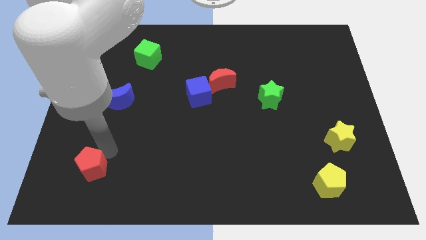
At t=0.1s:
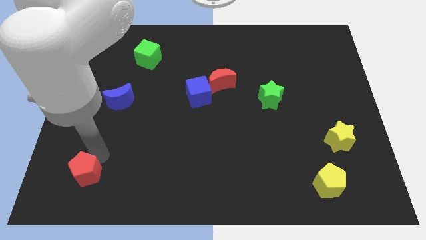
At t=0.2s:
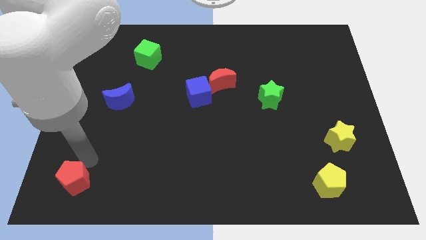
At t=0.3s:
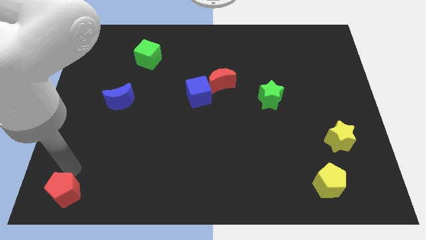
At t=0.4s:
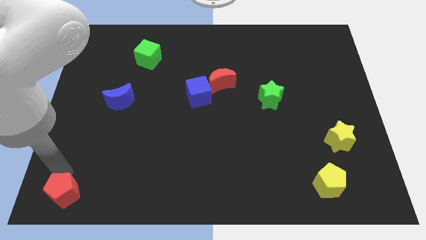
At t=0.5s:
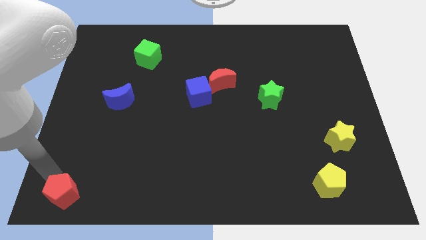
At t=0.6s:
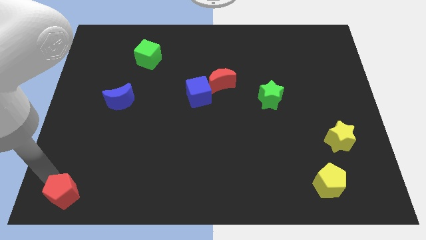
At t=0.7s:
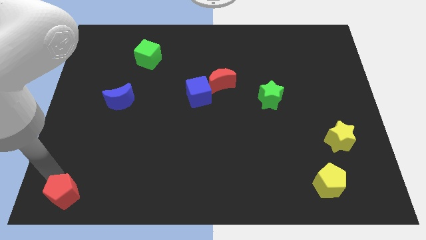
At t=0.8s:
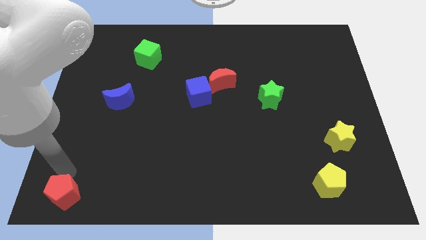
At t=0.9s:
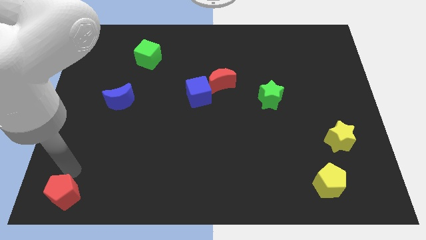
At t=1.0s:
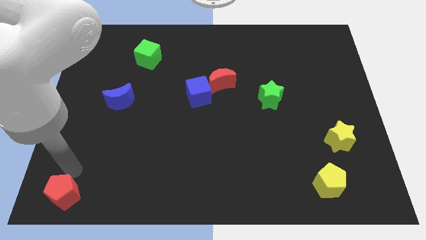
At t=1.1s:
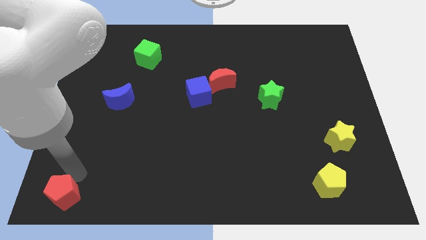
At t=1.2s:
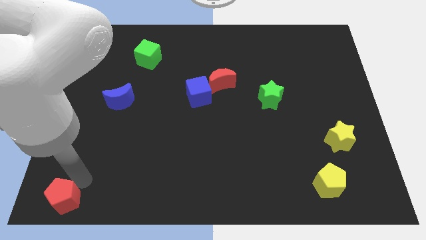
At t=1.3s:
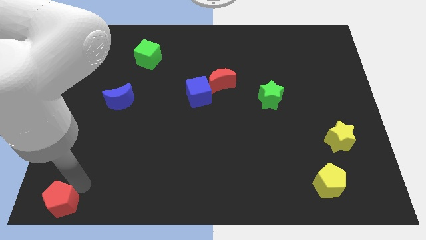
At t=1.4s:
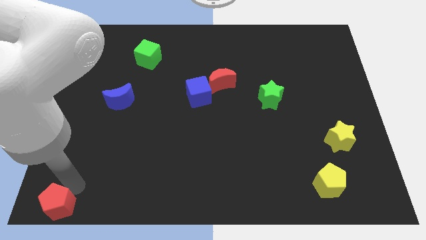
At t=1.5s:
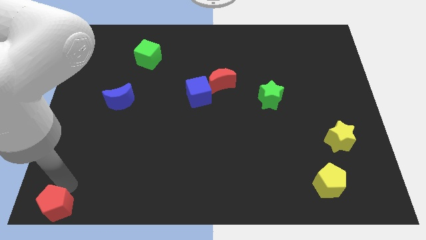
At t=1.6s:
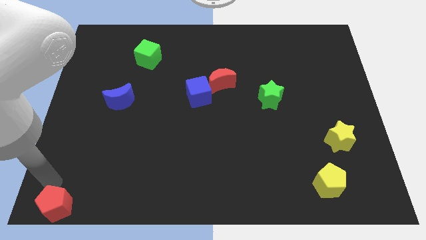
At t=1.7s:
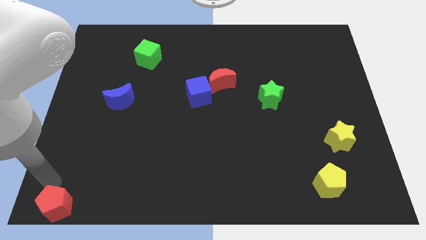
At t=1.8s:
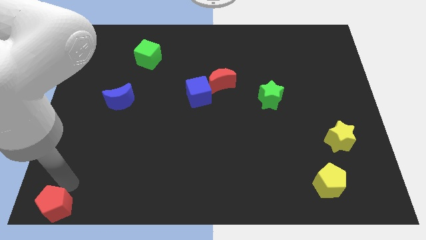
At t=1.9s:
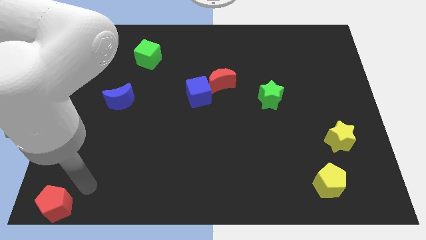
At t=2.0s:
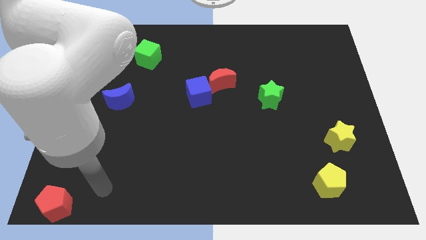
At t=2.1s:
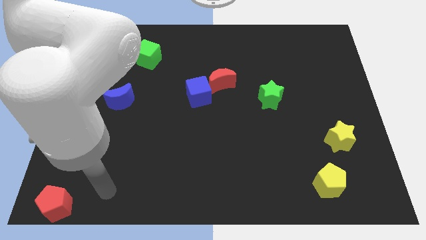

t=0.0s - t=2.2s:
slide red pentagon to the bottom left corner

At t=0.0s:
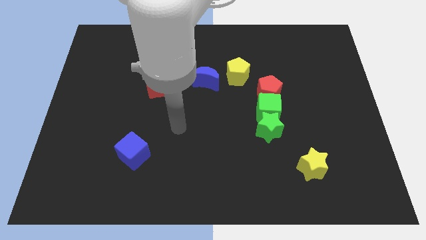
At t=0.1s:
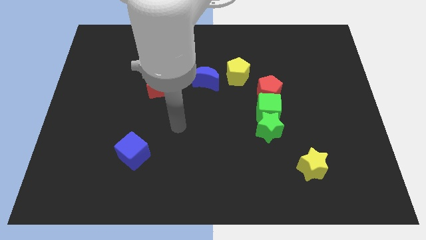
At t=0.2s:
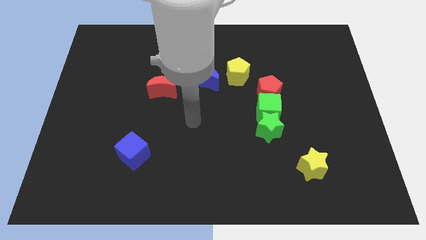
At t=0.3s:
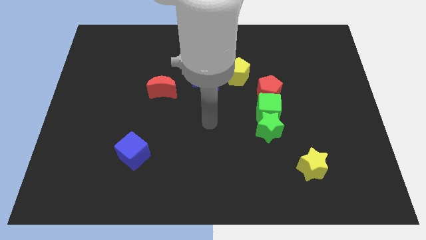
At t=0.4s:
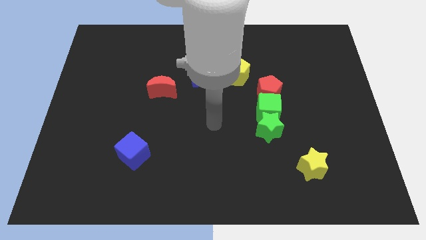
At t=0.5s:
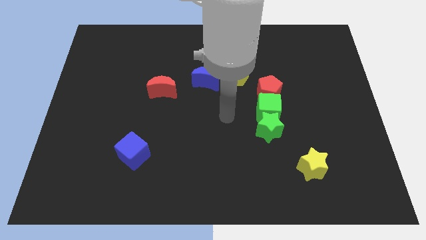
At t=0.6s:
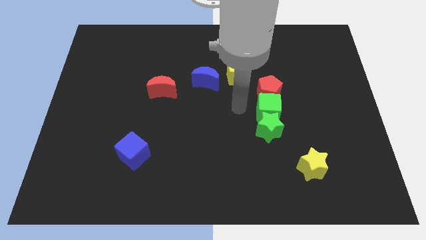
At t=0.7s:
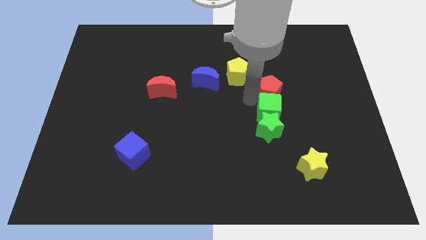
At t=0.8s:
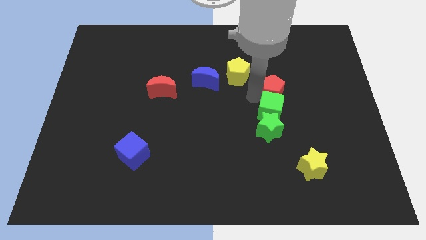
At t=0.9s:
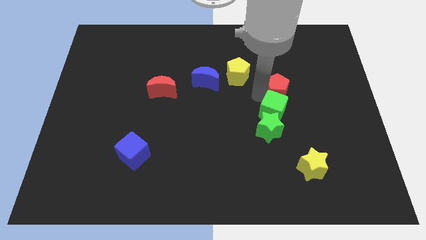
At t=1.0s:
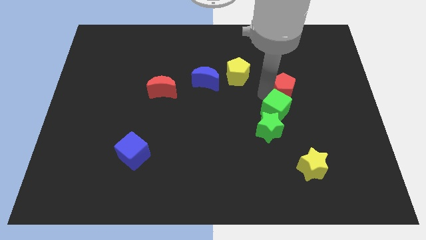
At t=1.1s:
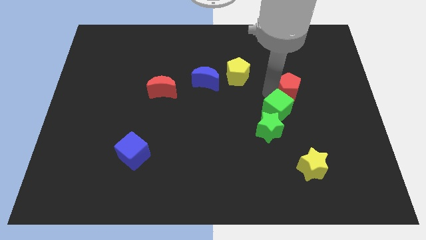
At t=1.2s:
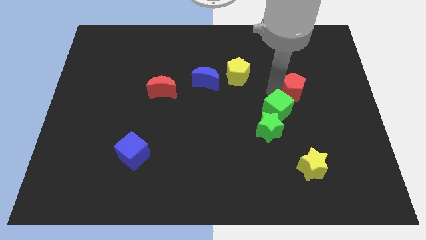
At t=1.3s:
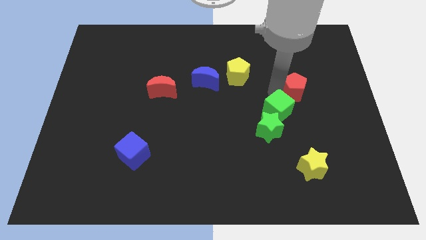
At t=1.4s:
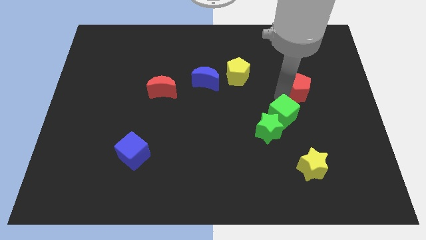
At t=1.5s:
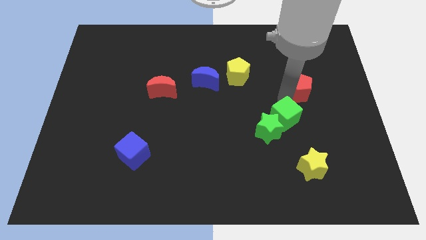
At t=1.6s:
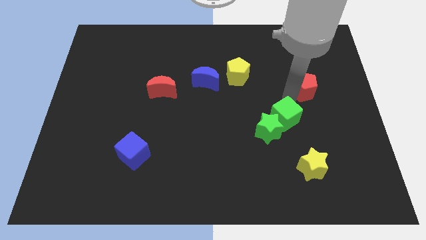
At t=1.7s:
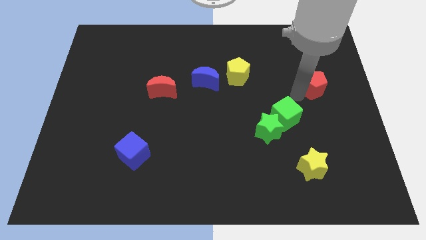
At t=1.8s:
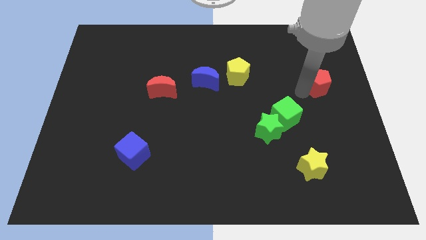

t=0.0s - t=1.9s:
separate red pentagon from green cube

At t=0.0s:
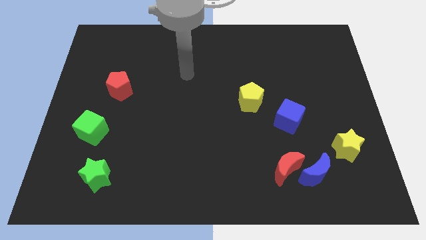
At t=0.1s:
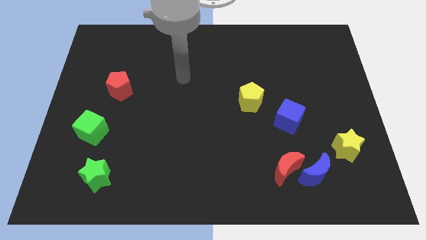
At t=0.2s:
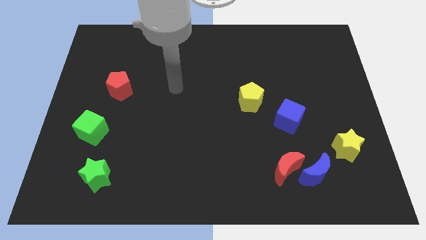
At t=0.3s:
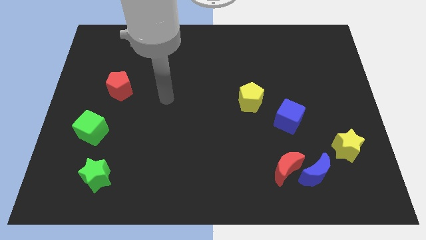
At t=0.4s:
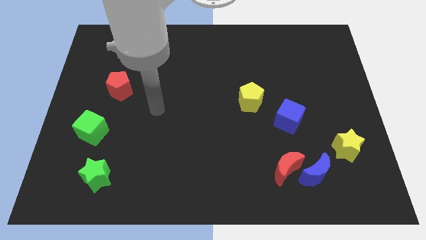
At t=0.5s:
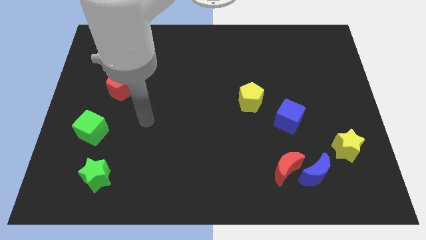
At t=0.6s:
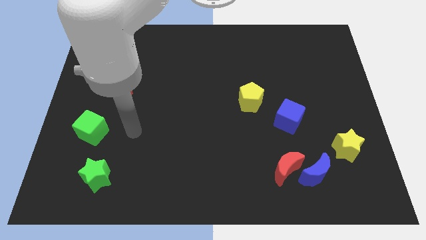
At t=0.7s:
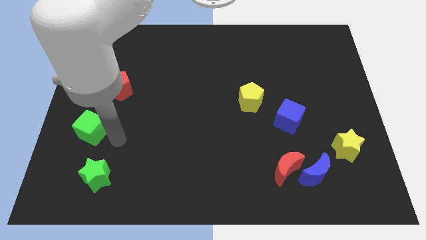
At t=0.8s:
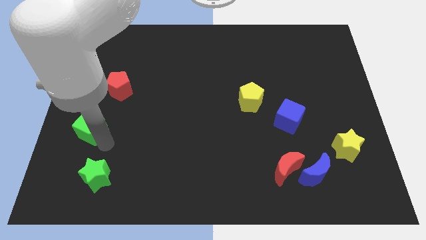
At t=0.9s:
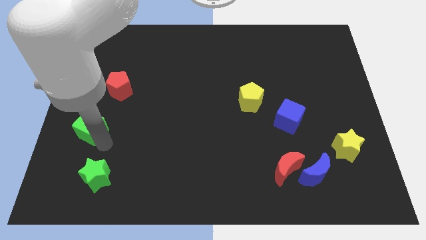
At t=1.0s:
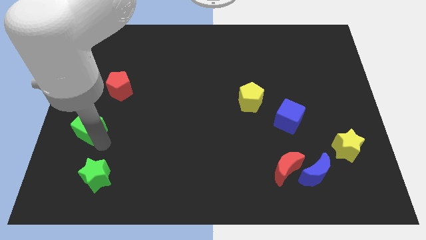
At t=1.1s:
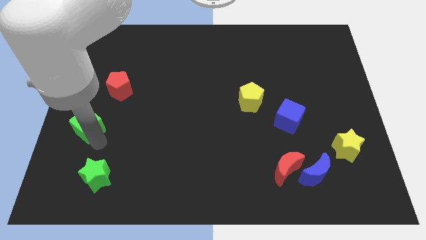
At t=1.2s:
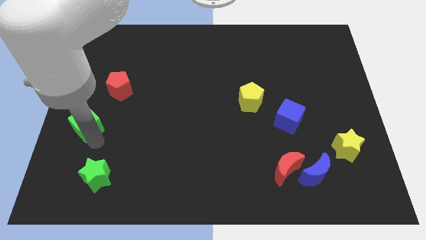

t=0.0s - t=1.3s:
place the arm near the green cube

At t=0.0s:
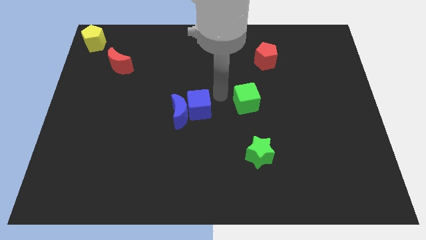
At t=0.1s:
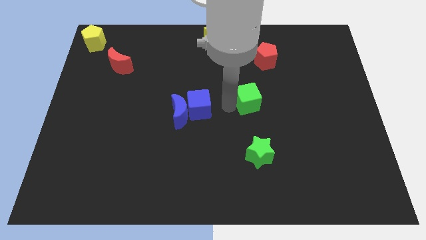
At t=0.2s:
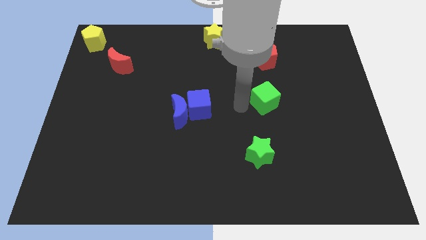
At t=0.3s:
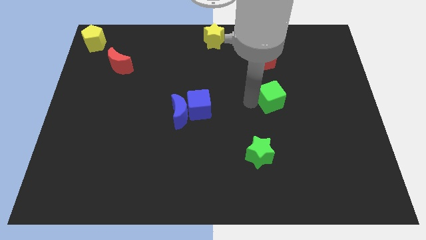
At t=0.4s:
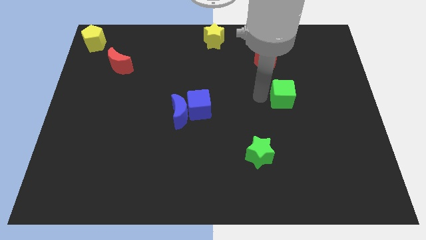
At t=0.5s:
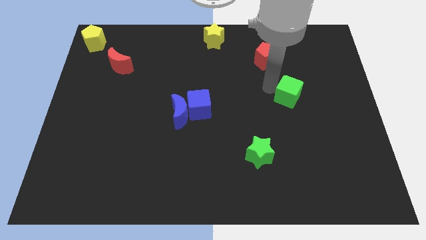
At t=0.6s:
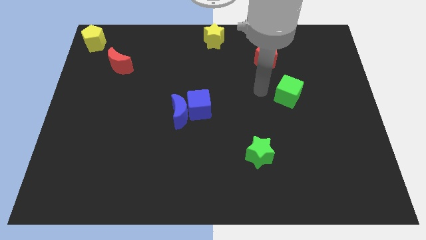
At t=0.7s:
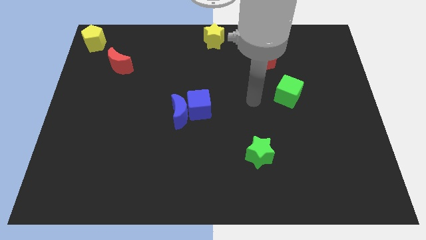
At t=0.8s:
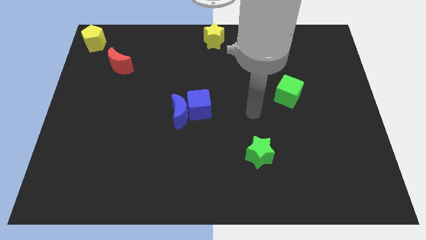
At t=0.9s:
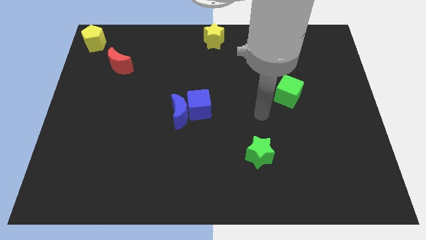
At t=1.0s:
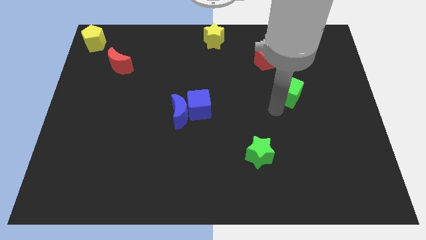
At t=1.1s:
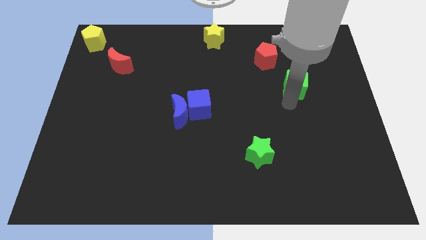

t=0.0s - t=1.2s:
move the green cube to the right of the board

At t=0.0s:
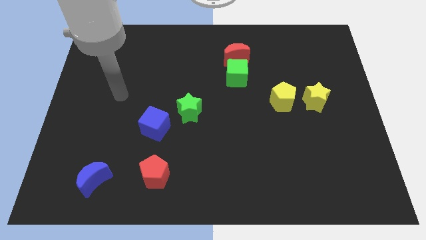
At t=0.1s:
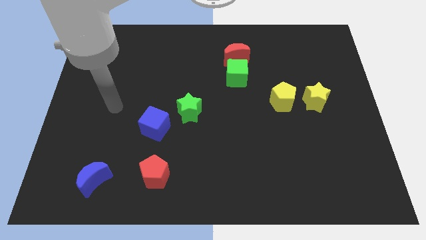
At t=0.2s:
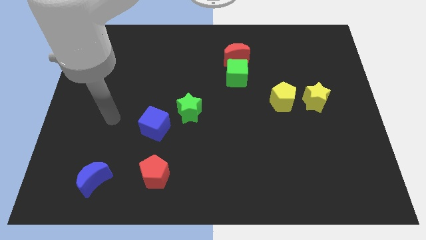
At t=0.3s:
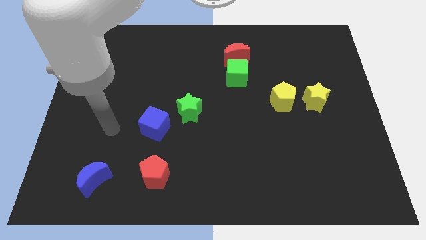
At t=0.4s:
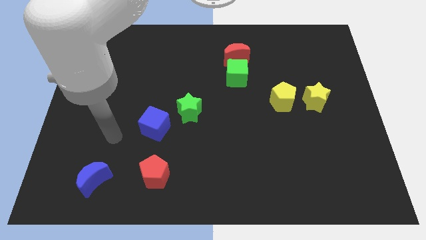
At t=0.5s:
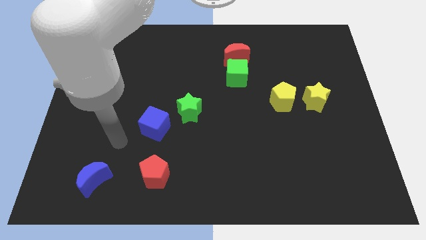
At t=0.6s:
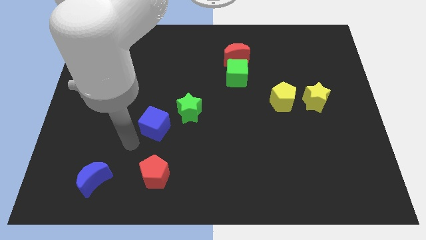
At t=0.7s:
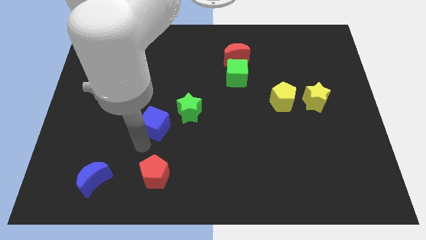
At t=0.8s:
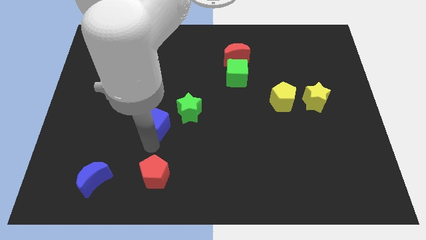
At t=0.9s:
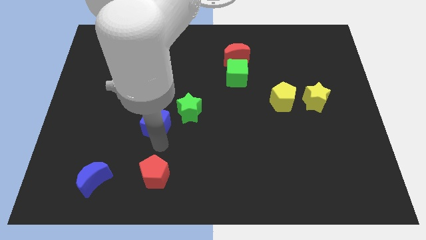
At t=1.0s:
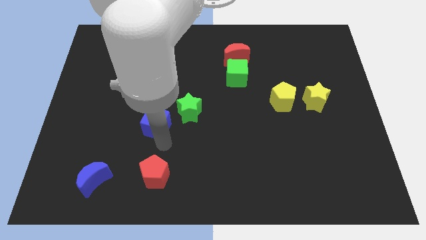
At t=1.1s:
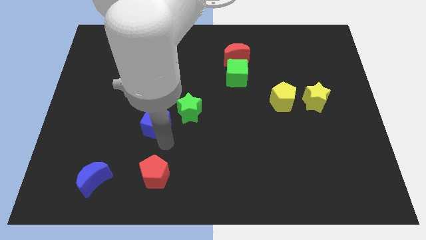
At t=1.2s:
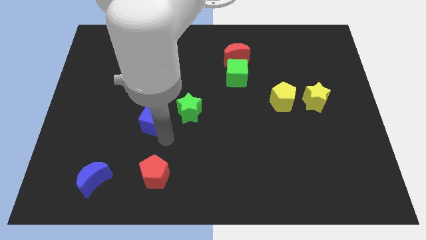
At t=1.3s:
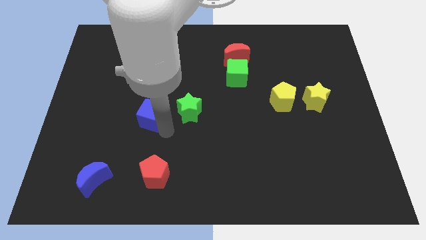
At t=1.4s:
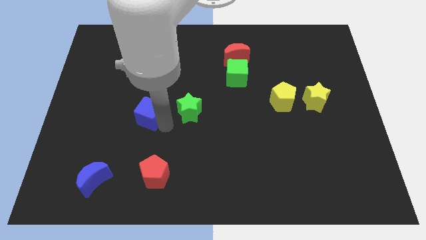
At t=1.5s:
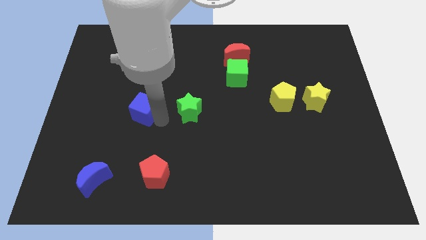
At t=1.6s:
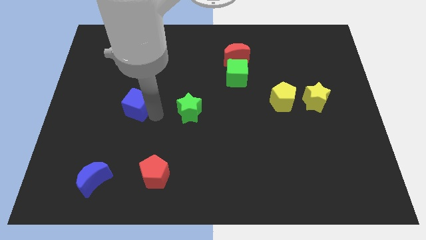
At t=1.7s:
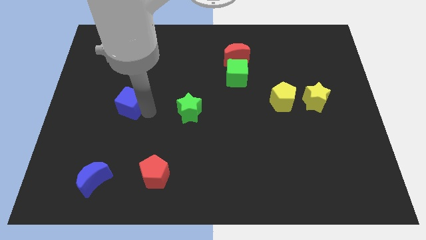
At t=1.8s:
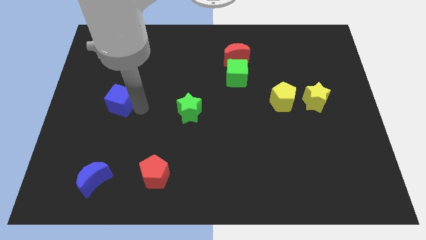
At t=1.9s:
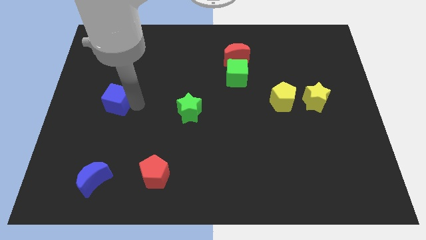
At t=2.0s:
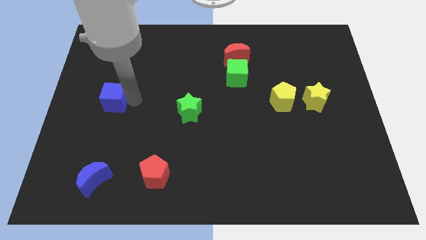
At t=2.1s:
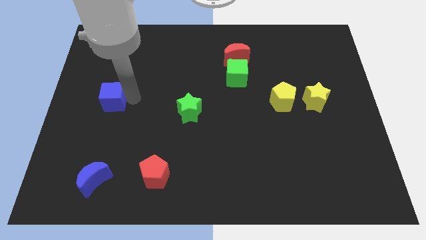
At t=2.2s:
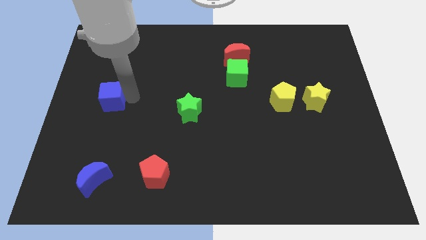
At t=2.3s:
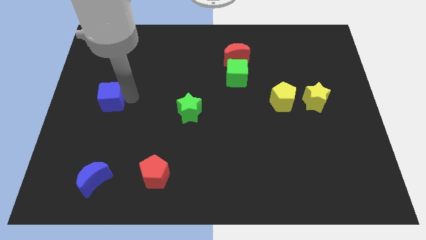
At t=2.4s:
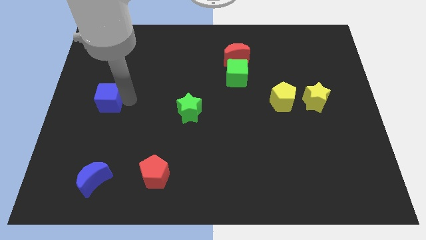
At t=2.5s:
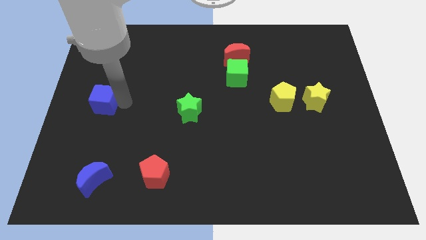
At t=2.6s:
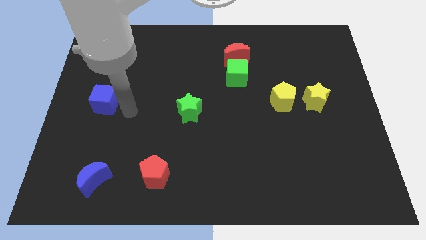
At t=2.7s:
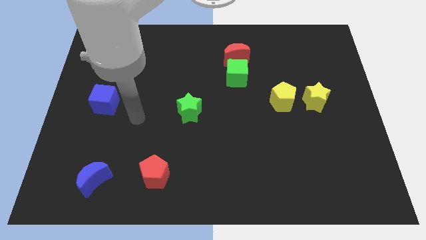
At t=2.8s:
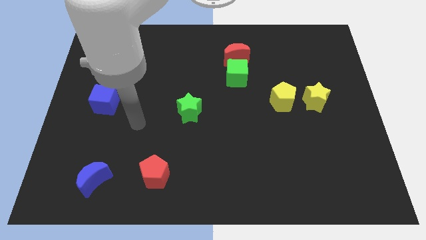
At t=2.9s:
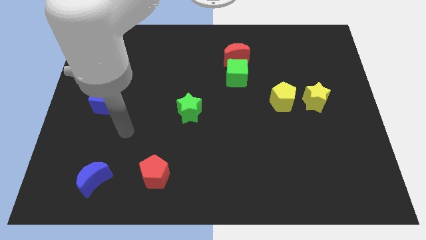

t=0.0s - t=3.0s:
push the blue cube towards the left center of the board
